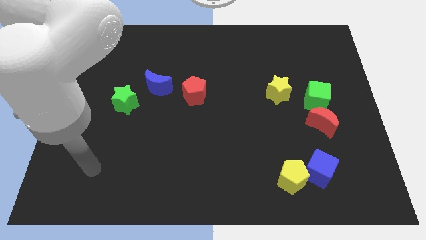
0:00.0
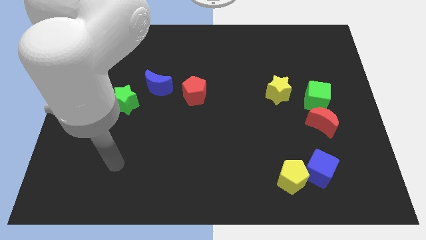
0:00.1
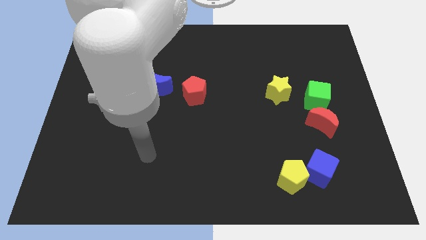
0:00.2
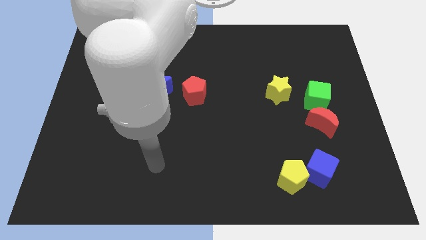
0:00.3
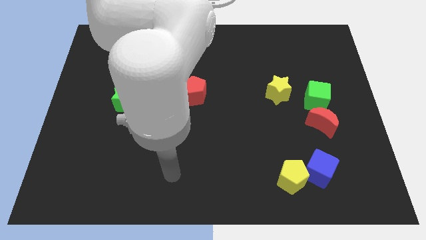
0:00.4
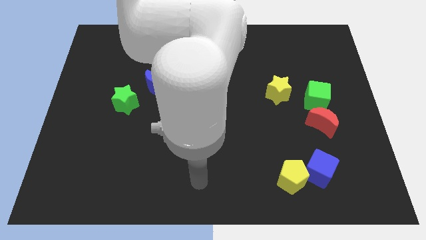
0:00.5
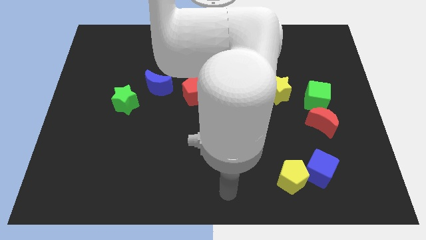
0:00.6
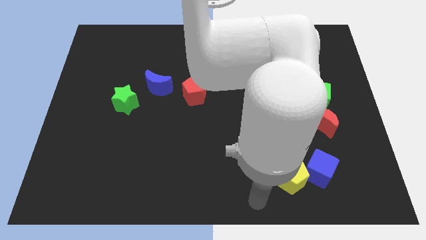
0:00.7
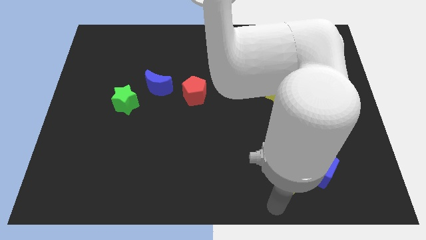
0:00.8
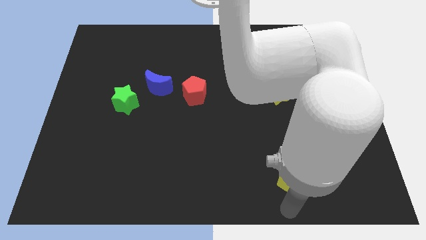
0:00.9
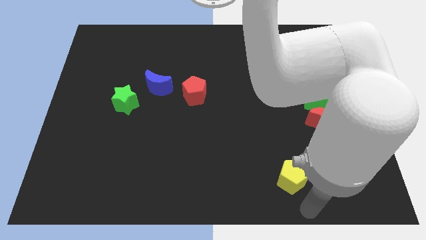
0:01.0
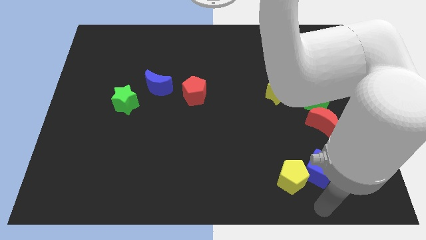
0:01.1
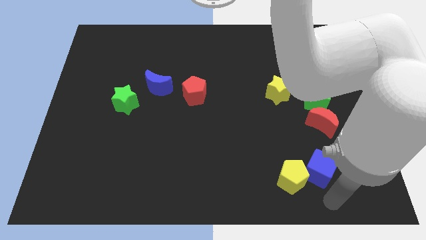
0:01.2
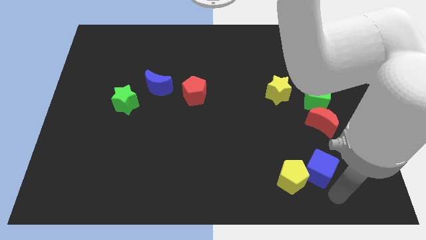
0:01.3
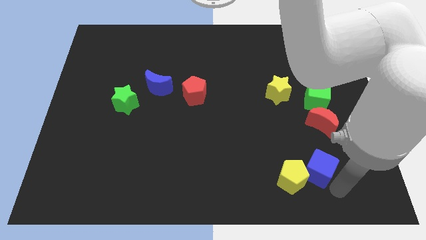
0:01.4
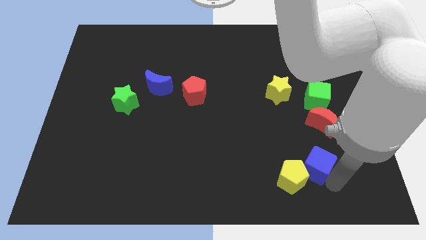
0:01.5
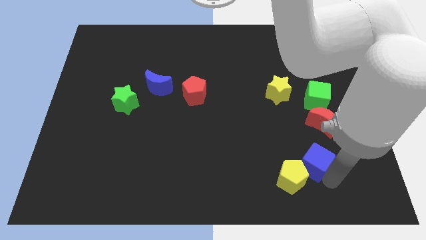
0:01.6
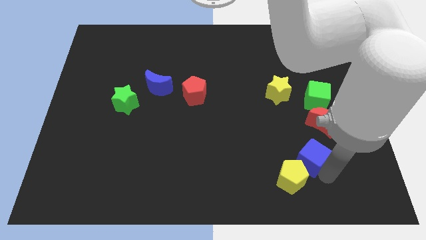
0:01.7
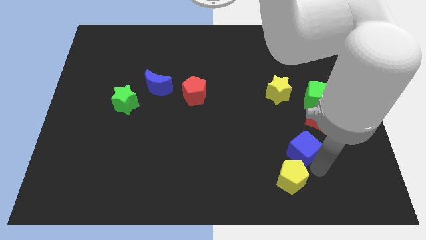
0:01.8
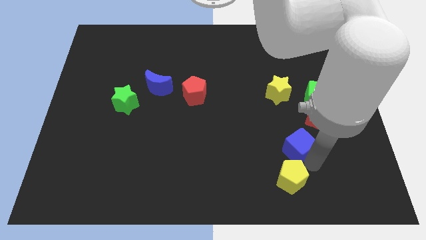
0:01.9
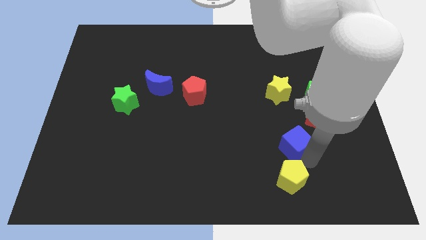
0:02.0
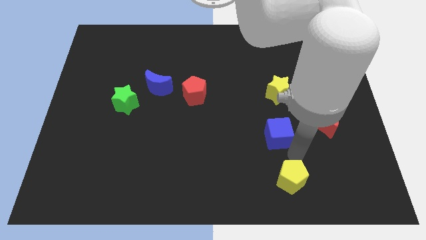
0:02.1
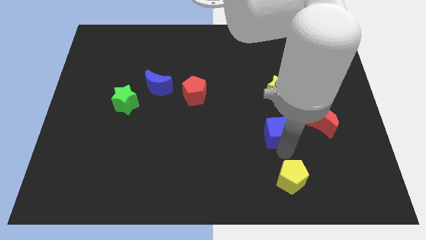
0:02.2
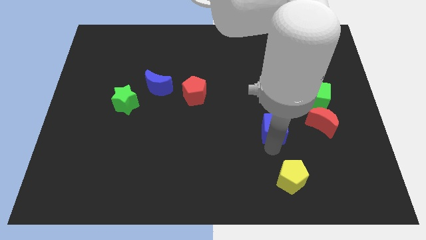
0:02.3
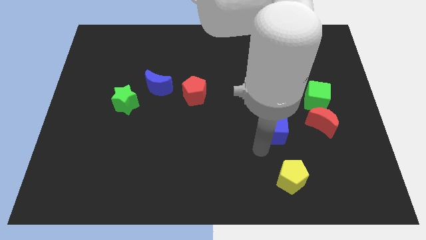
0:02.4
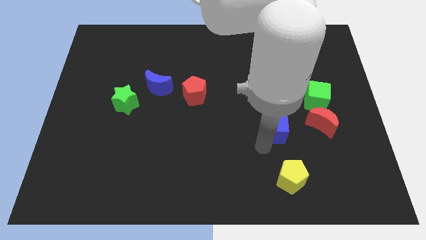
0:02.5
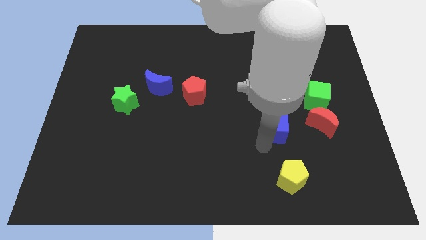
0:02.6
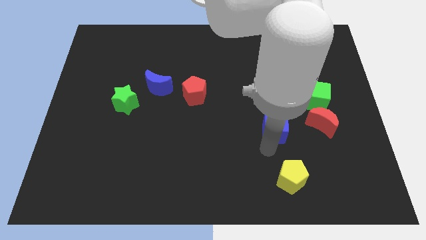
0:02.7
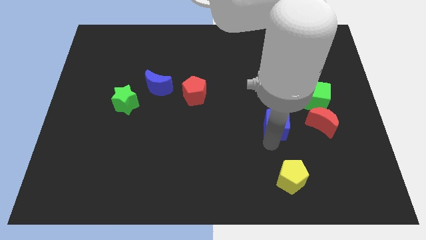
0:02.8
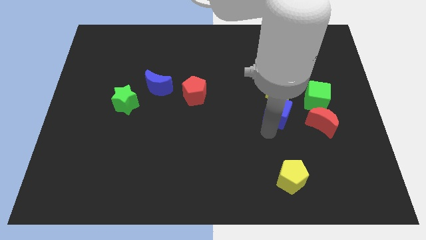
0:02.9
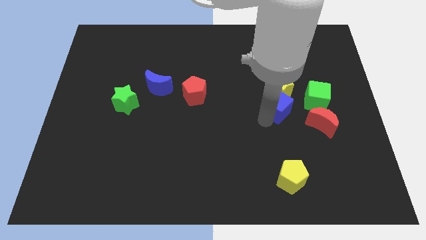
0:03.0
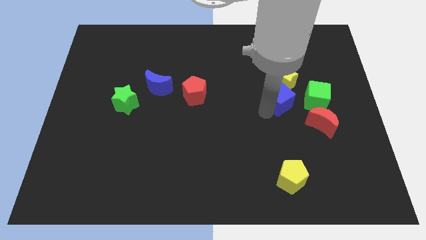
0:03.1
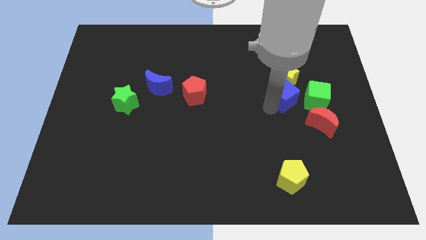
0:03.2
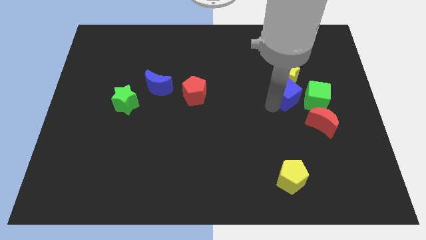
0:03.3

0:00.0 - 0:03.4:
put the blue cube next to the yellow star

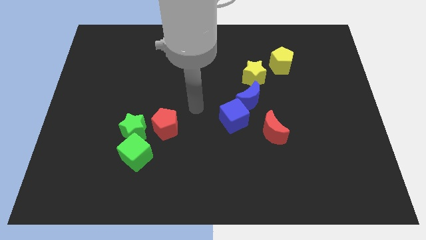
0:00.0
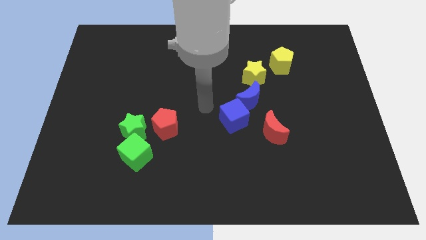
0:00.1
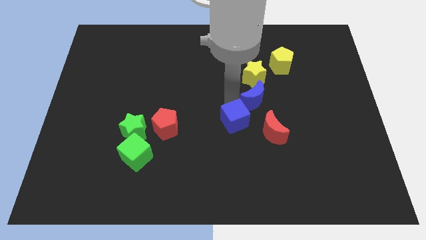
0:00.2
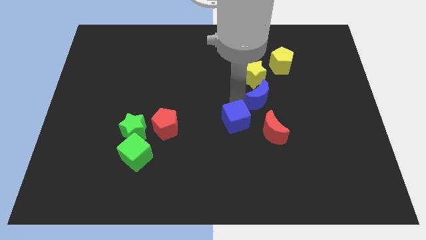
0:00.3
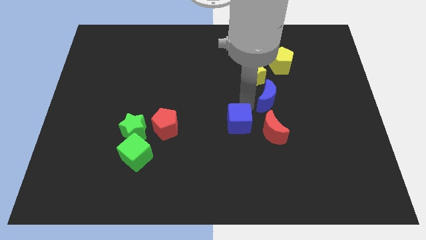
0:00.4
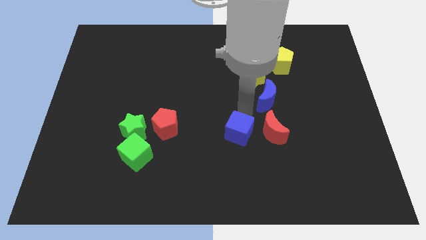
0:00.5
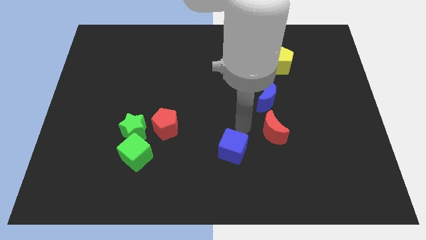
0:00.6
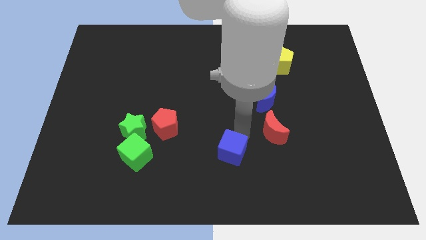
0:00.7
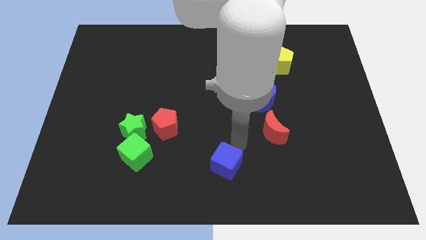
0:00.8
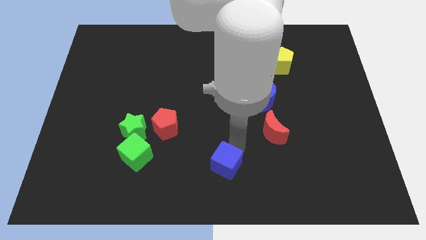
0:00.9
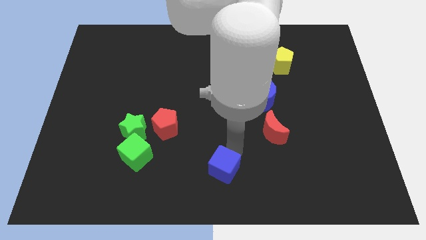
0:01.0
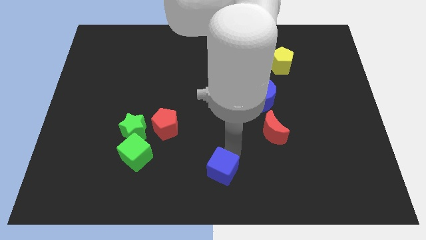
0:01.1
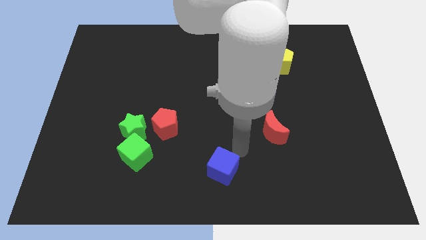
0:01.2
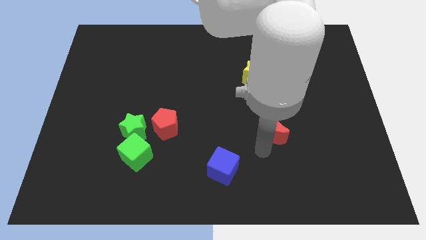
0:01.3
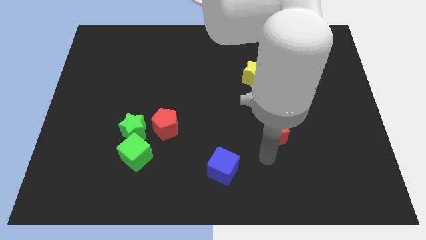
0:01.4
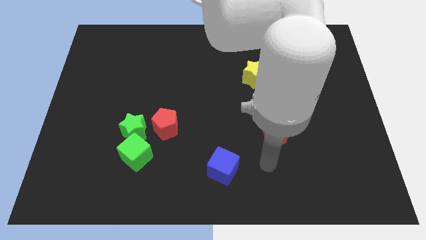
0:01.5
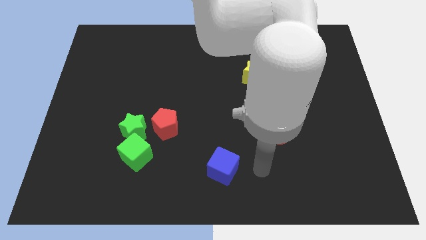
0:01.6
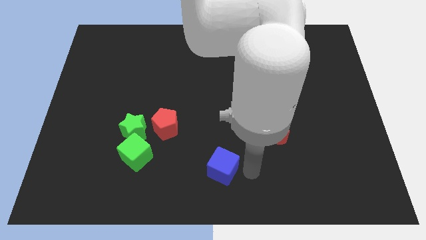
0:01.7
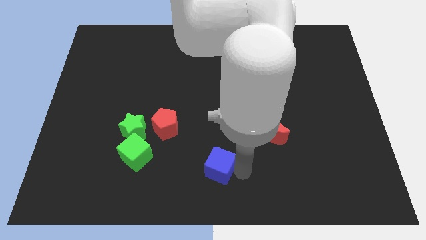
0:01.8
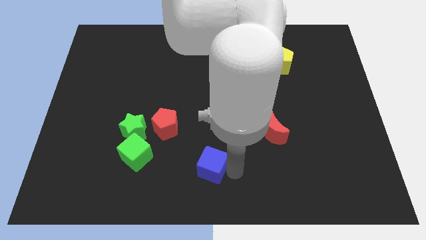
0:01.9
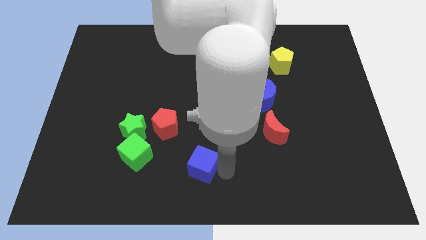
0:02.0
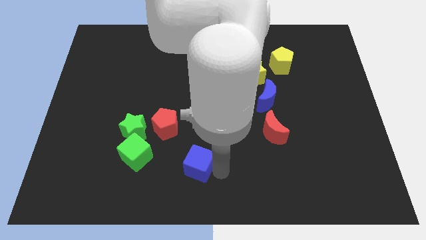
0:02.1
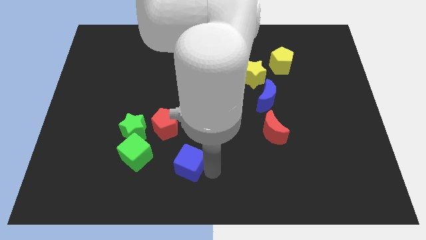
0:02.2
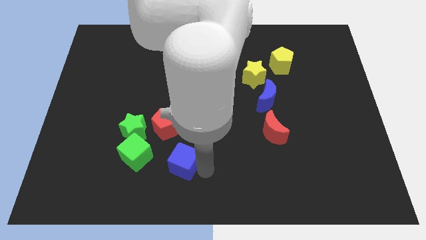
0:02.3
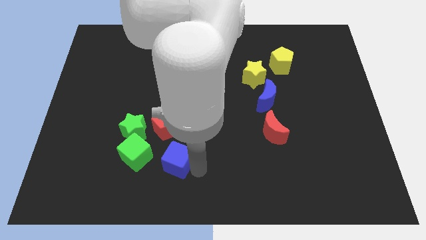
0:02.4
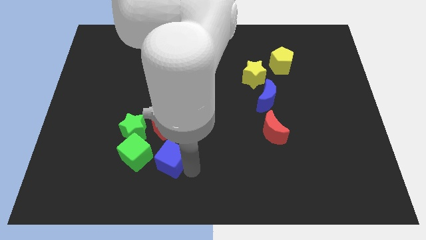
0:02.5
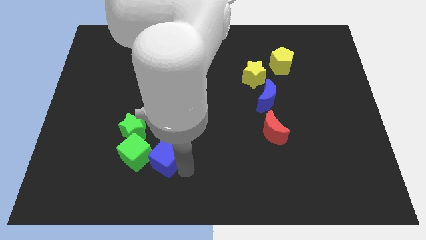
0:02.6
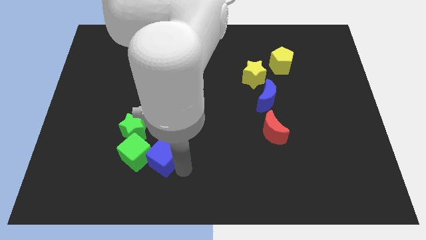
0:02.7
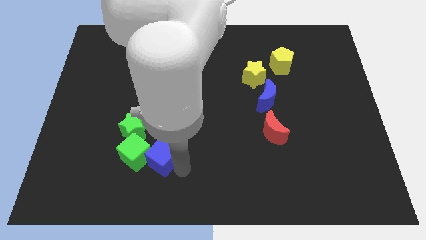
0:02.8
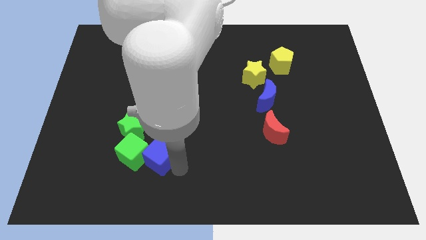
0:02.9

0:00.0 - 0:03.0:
push the blue cube towards the green cube

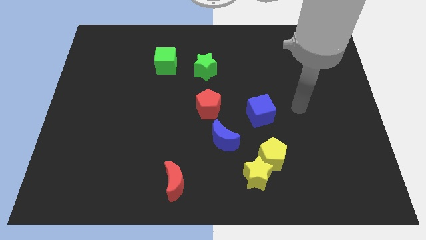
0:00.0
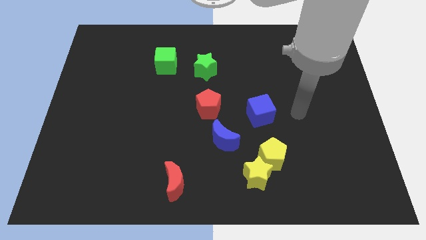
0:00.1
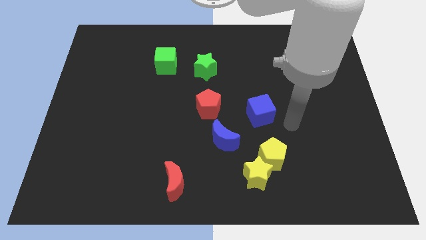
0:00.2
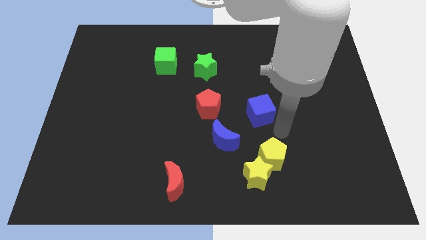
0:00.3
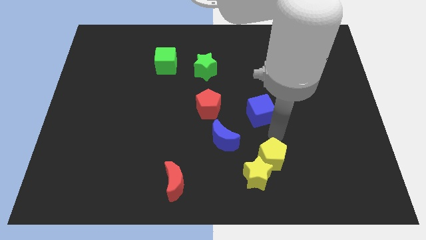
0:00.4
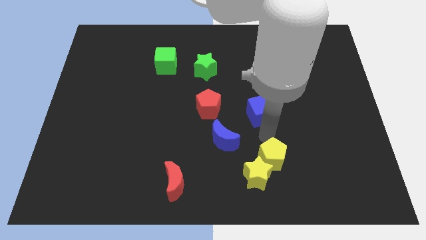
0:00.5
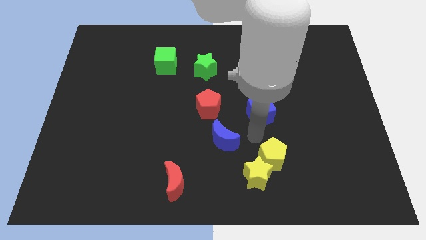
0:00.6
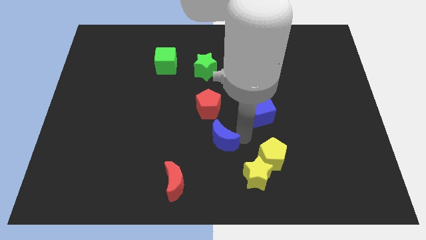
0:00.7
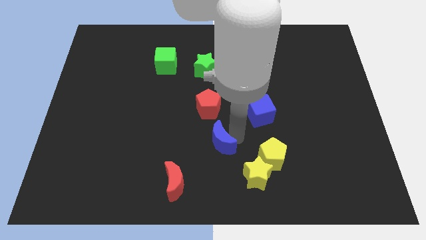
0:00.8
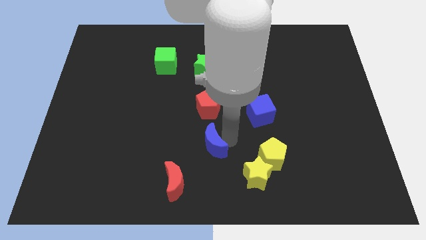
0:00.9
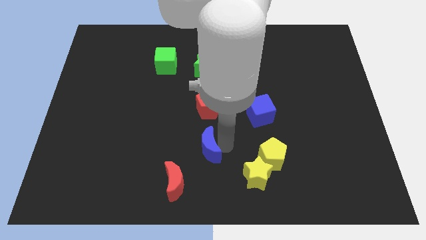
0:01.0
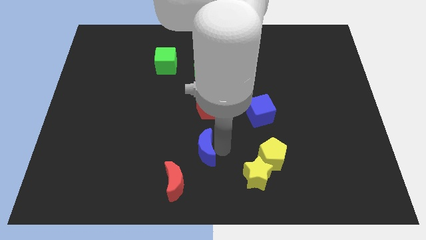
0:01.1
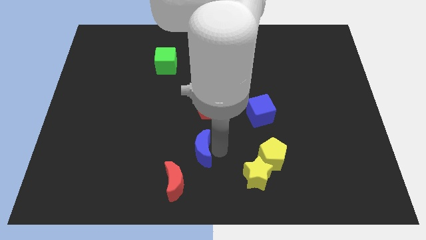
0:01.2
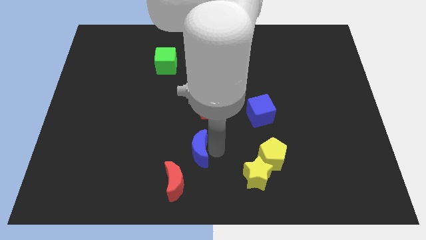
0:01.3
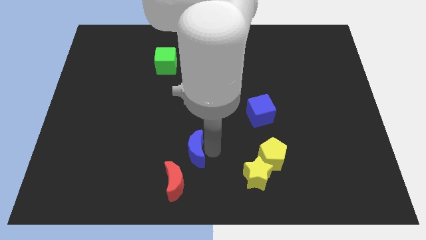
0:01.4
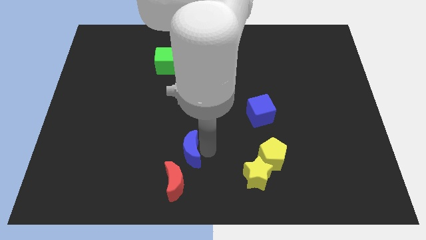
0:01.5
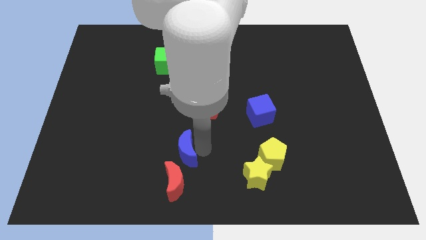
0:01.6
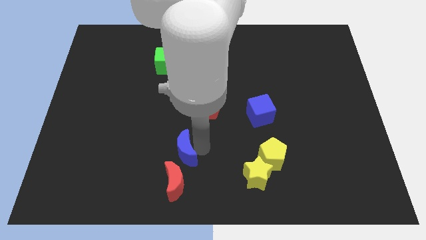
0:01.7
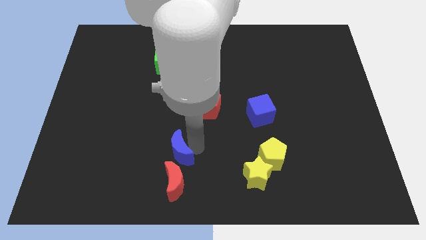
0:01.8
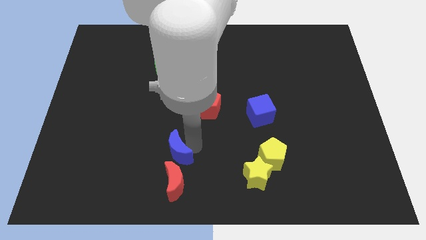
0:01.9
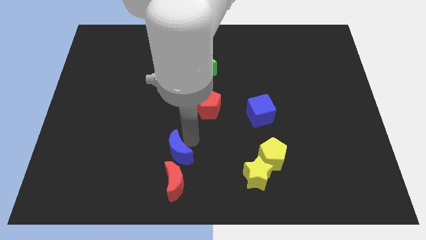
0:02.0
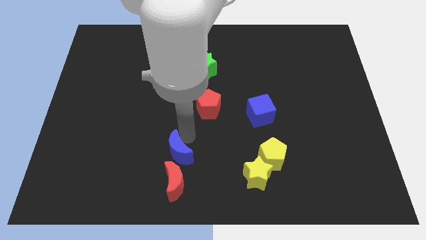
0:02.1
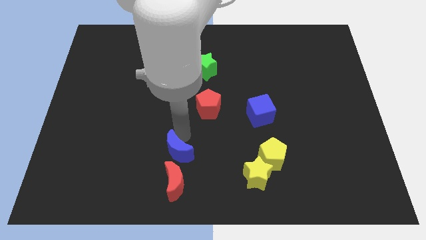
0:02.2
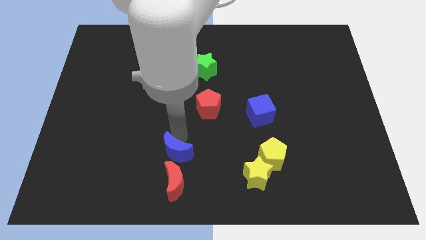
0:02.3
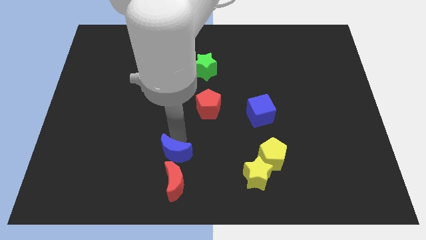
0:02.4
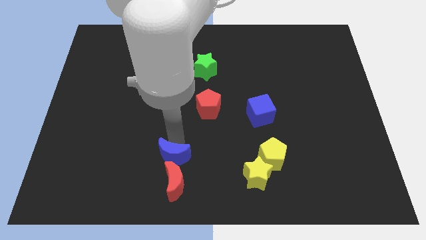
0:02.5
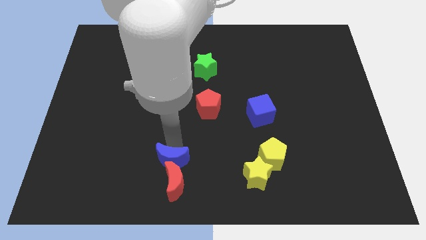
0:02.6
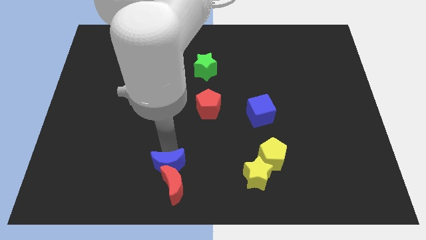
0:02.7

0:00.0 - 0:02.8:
move the blue moon to the red moon
